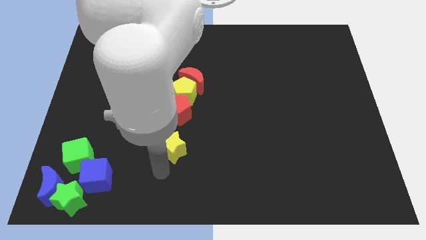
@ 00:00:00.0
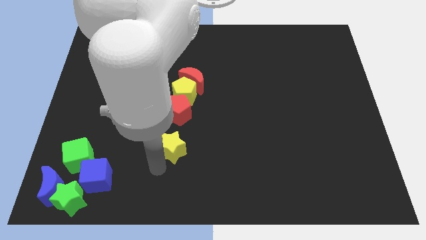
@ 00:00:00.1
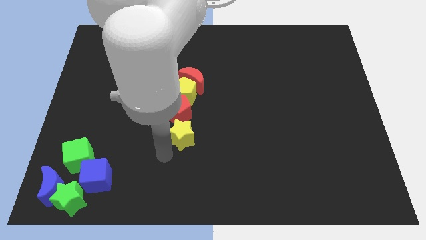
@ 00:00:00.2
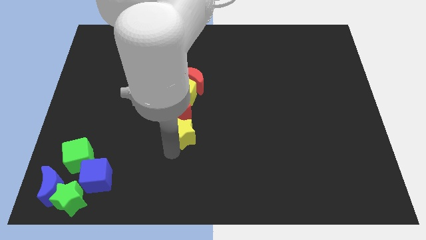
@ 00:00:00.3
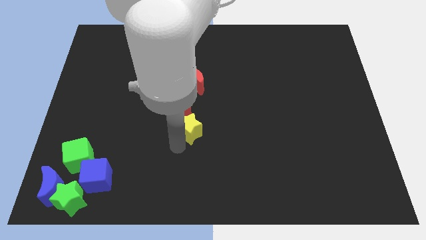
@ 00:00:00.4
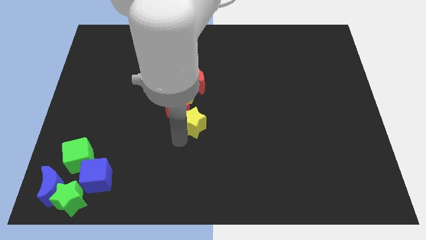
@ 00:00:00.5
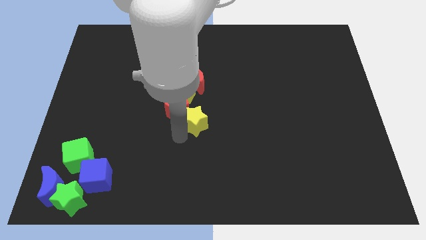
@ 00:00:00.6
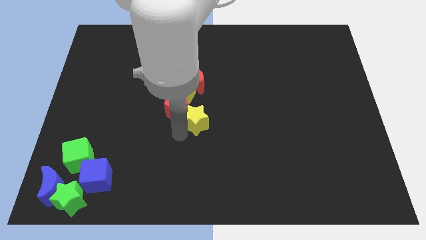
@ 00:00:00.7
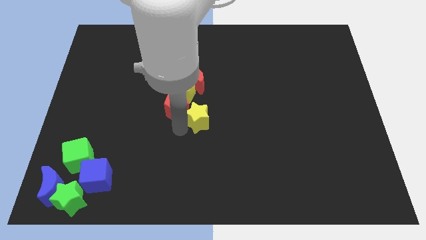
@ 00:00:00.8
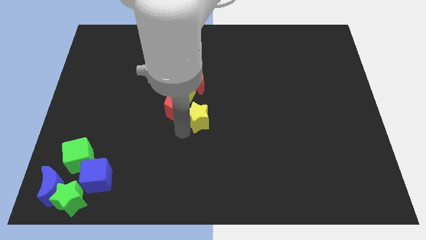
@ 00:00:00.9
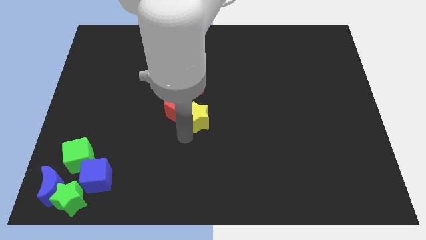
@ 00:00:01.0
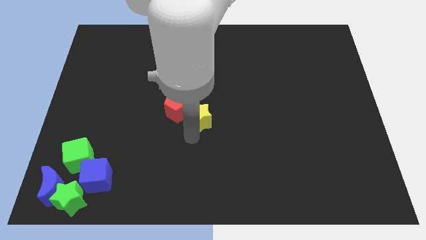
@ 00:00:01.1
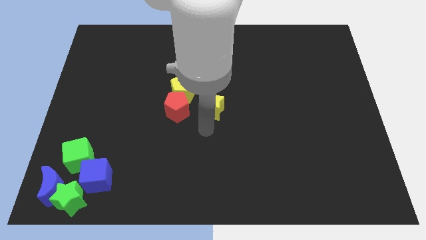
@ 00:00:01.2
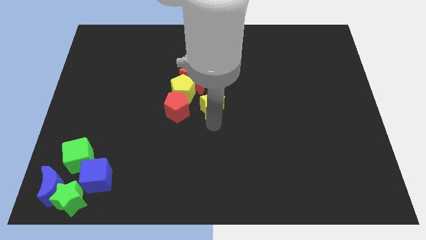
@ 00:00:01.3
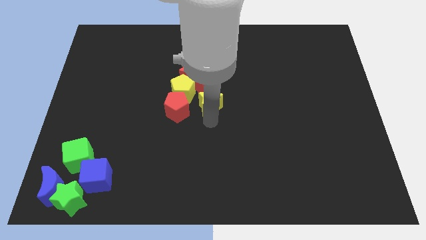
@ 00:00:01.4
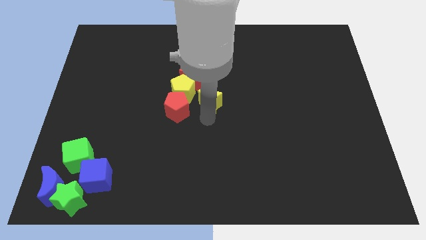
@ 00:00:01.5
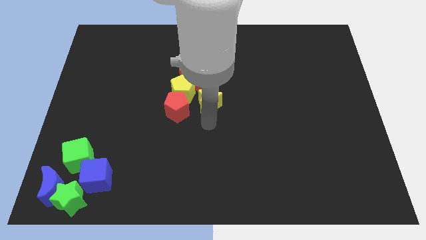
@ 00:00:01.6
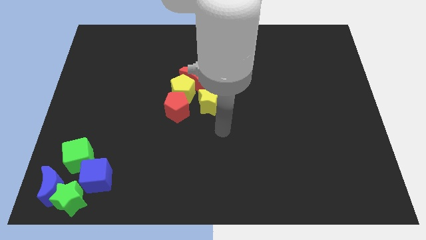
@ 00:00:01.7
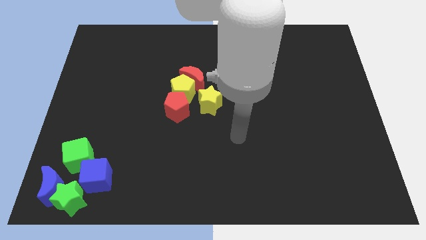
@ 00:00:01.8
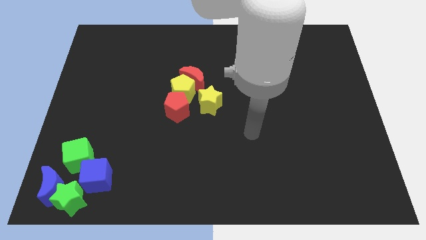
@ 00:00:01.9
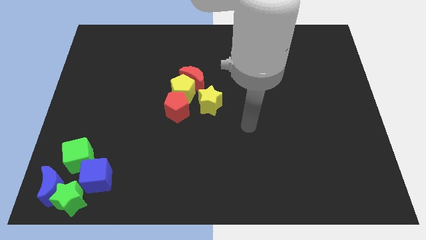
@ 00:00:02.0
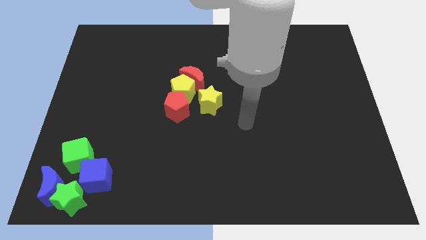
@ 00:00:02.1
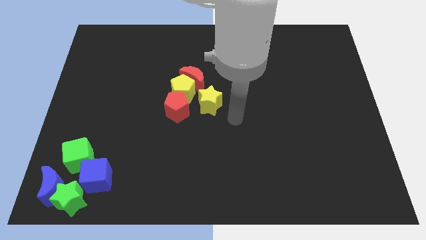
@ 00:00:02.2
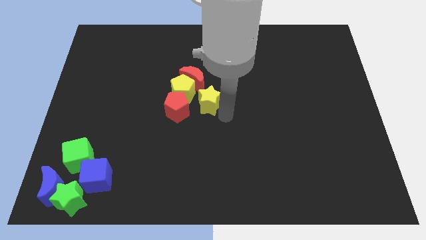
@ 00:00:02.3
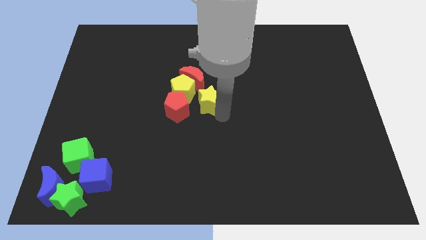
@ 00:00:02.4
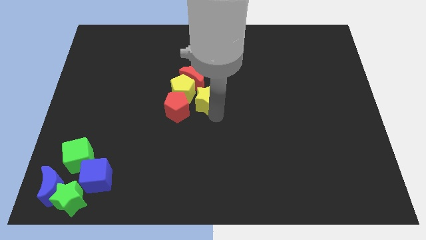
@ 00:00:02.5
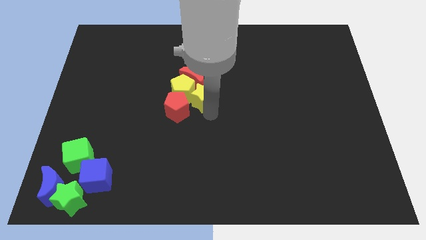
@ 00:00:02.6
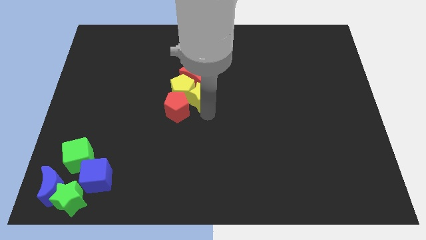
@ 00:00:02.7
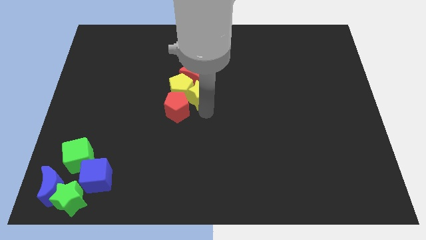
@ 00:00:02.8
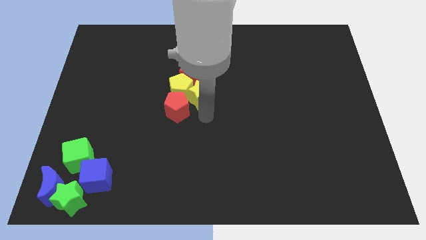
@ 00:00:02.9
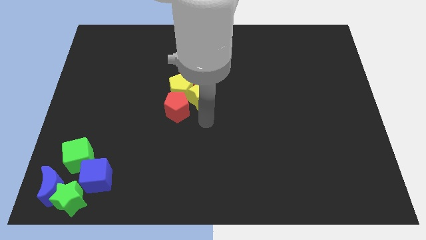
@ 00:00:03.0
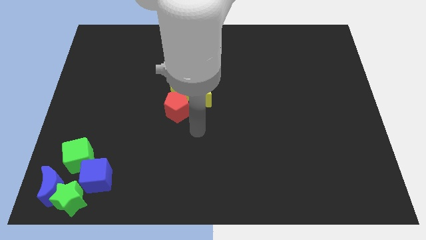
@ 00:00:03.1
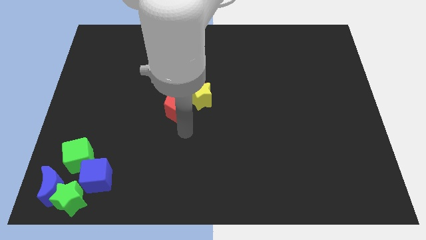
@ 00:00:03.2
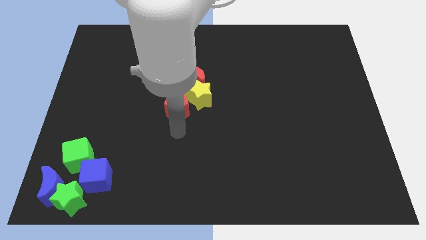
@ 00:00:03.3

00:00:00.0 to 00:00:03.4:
push the yellow star into the yellow pentagon

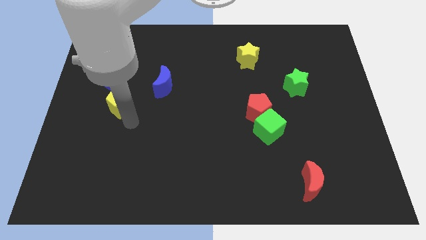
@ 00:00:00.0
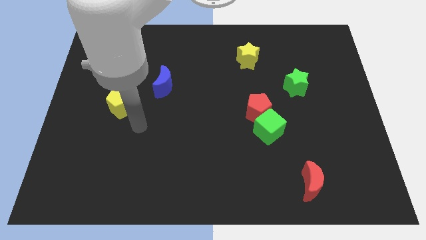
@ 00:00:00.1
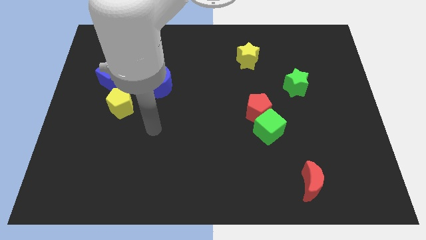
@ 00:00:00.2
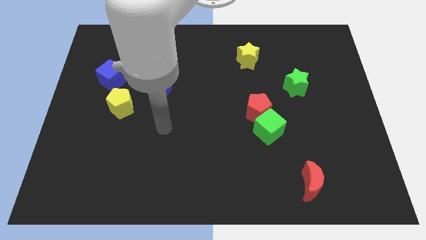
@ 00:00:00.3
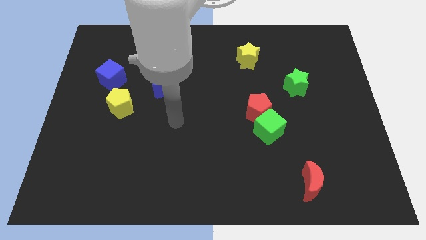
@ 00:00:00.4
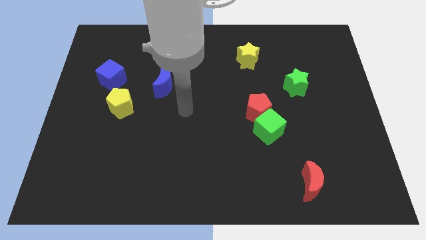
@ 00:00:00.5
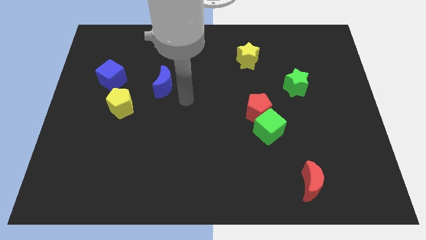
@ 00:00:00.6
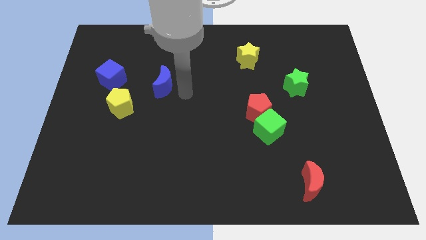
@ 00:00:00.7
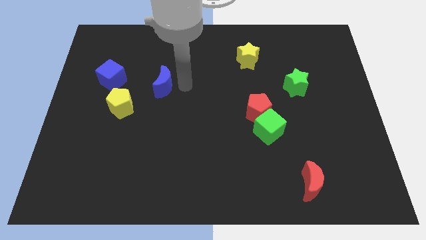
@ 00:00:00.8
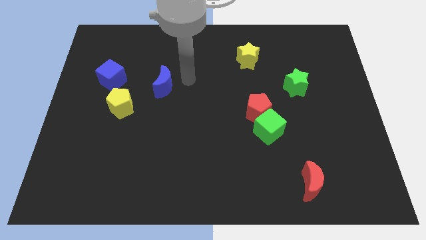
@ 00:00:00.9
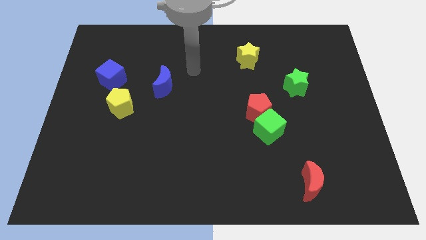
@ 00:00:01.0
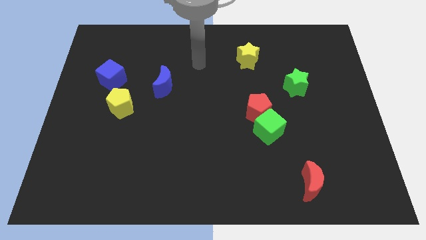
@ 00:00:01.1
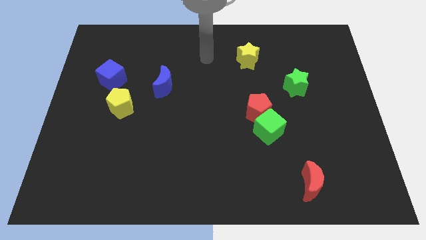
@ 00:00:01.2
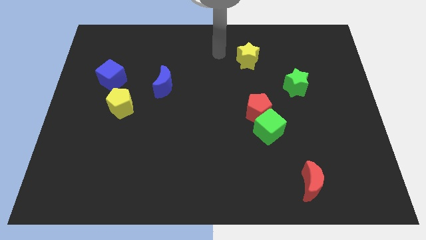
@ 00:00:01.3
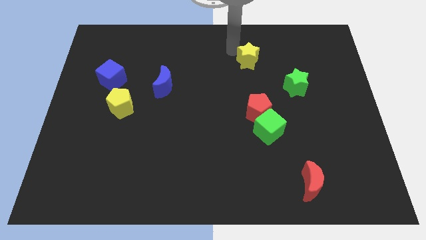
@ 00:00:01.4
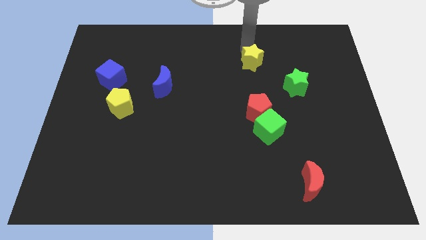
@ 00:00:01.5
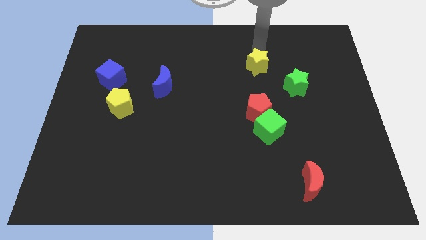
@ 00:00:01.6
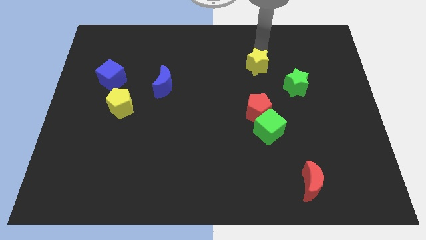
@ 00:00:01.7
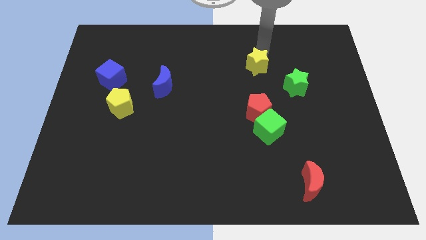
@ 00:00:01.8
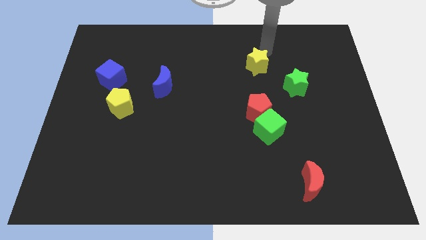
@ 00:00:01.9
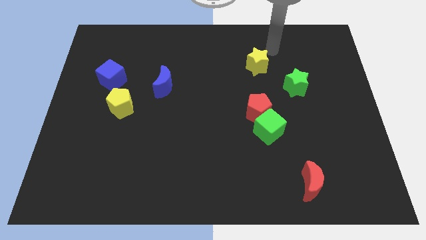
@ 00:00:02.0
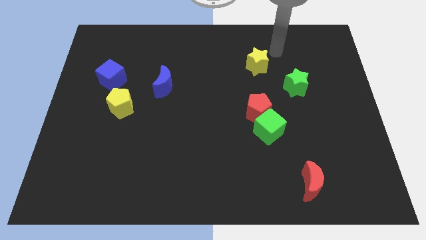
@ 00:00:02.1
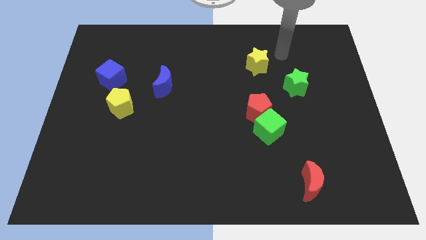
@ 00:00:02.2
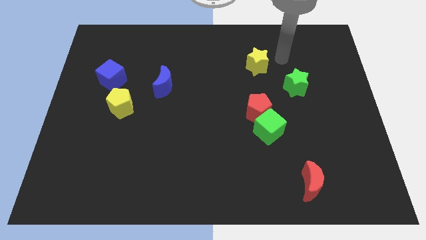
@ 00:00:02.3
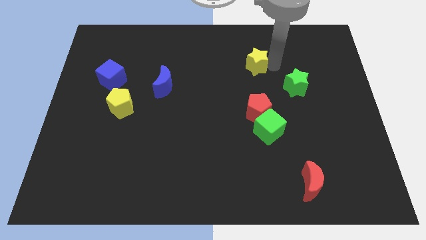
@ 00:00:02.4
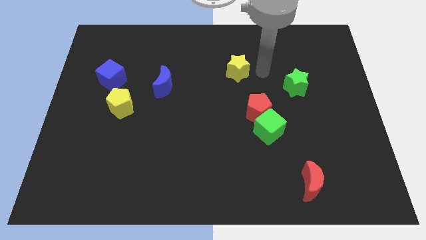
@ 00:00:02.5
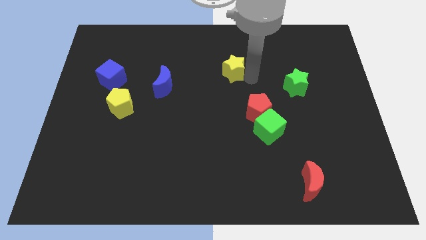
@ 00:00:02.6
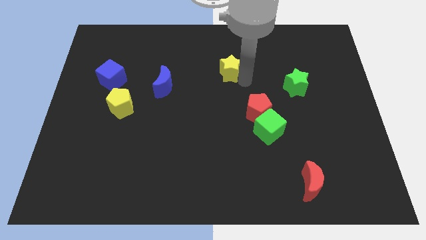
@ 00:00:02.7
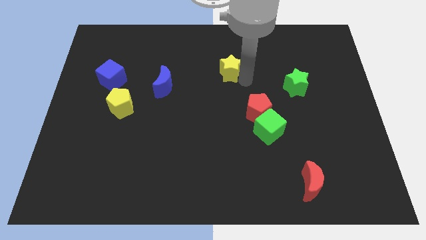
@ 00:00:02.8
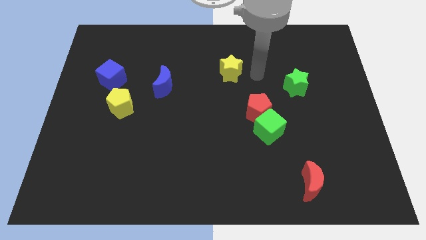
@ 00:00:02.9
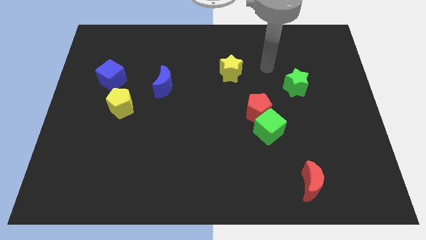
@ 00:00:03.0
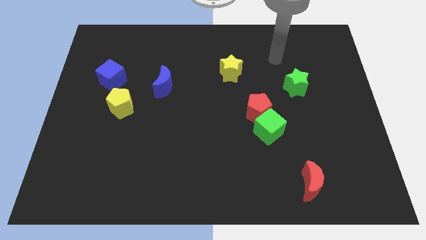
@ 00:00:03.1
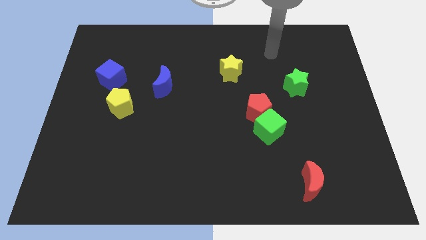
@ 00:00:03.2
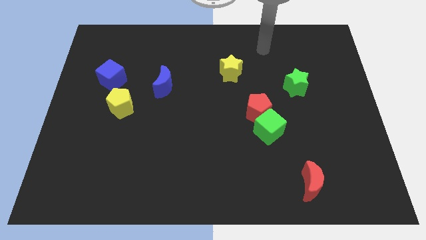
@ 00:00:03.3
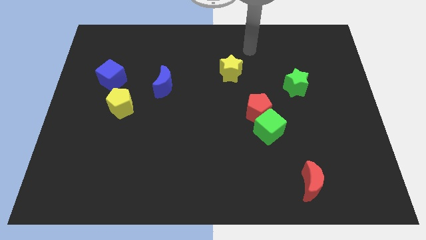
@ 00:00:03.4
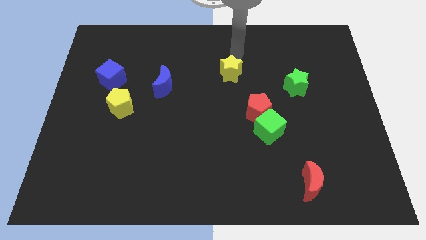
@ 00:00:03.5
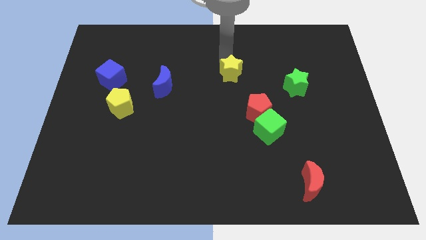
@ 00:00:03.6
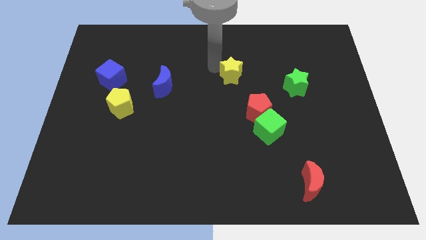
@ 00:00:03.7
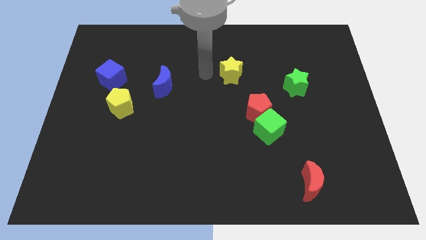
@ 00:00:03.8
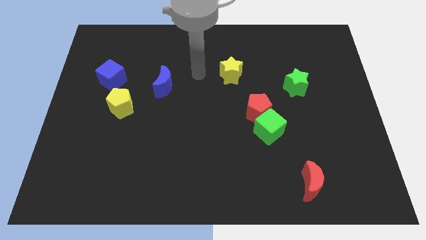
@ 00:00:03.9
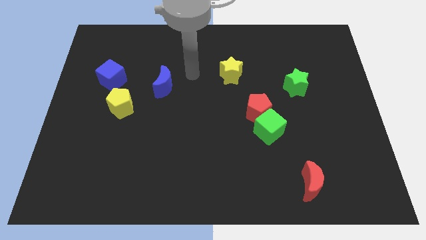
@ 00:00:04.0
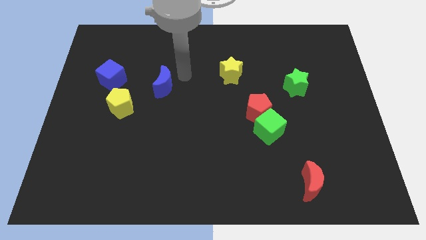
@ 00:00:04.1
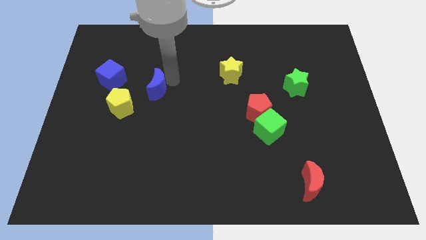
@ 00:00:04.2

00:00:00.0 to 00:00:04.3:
move the yellow star slightly towards the blue moon

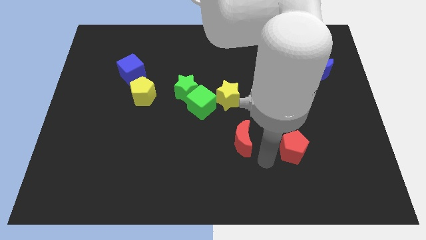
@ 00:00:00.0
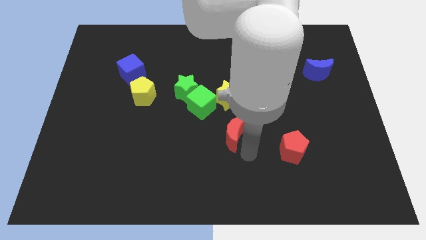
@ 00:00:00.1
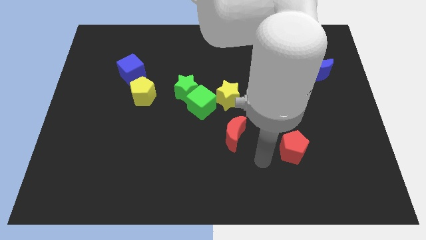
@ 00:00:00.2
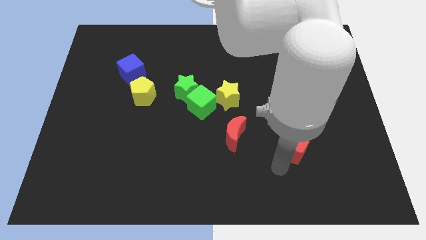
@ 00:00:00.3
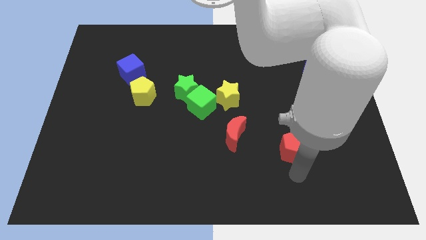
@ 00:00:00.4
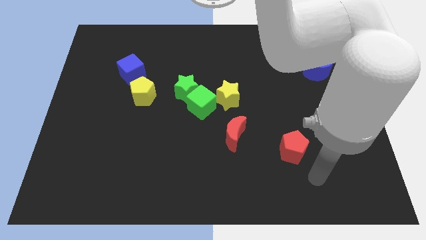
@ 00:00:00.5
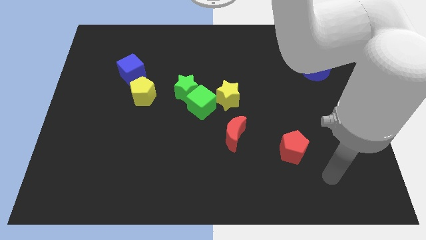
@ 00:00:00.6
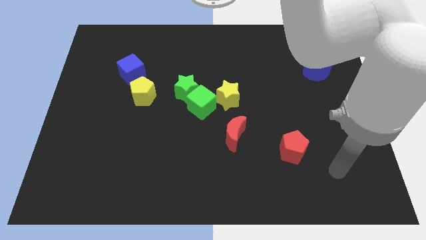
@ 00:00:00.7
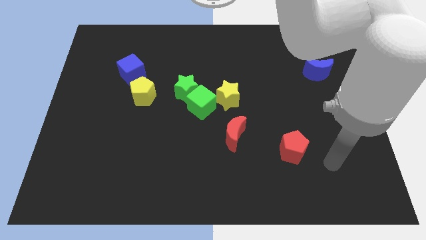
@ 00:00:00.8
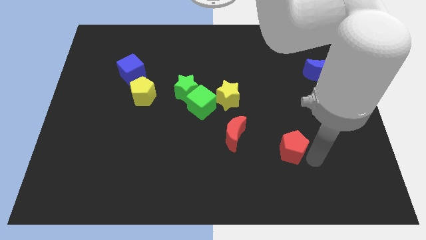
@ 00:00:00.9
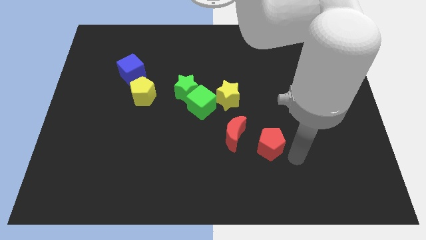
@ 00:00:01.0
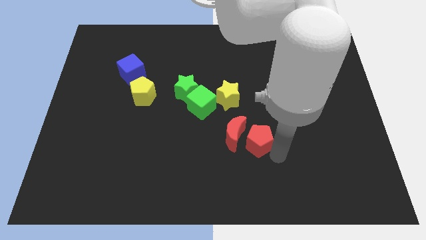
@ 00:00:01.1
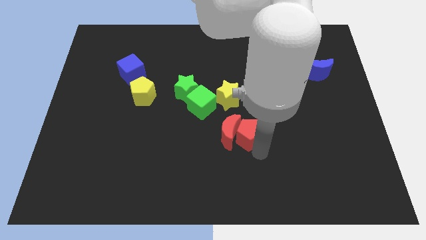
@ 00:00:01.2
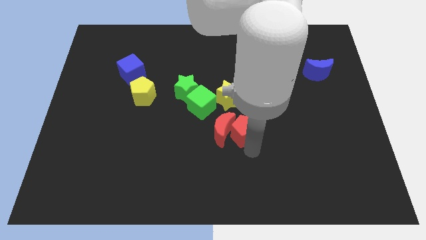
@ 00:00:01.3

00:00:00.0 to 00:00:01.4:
push red pentagon into the red crescent
